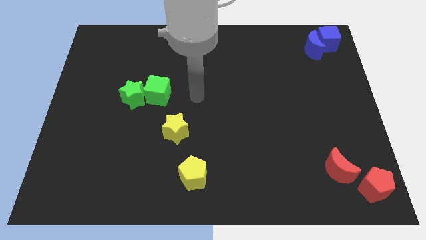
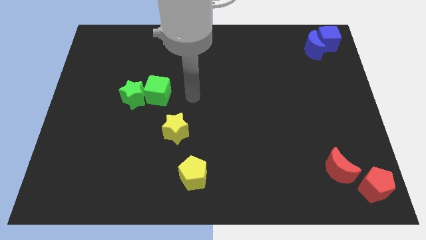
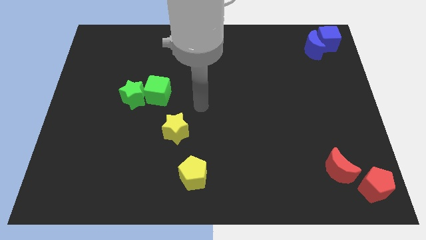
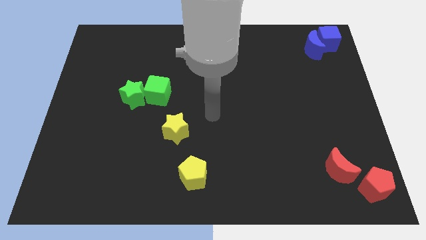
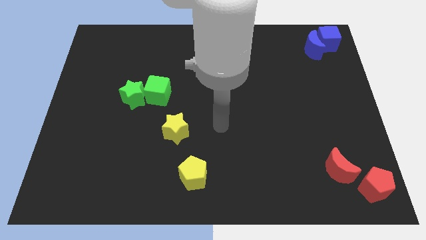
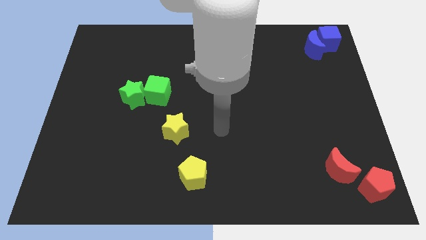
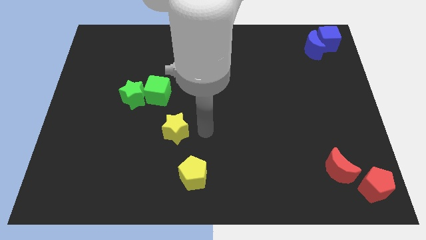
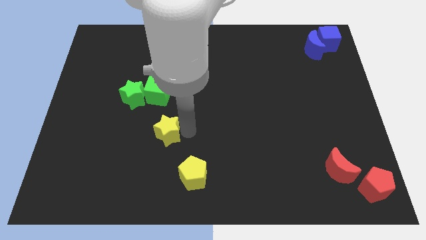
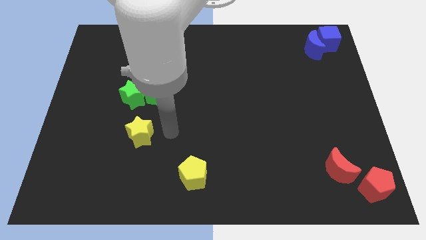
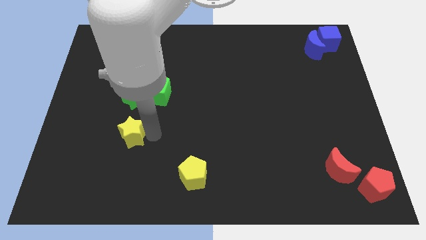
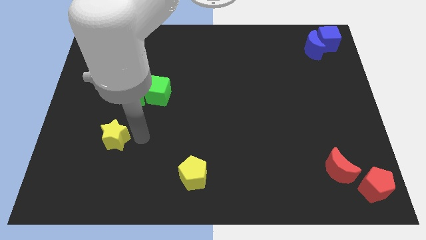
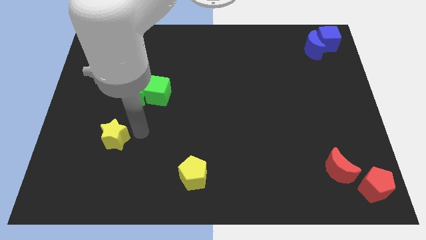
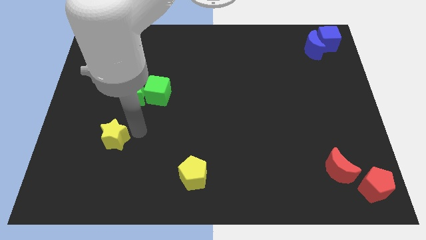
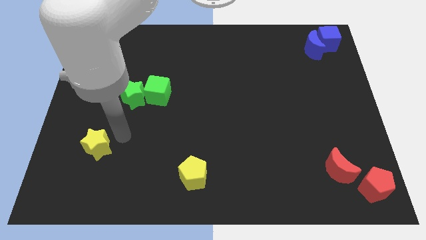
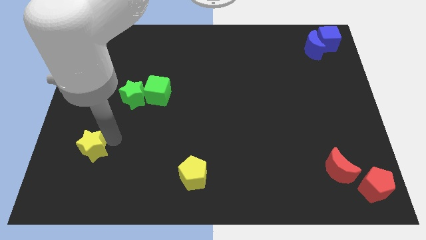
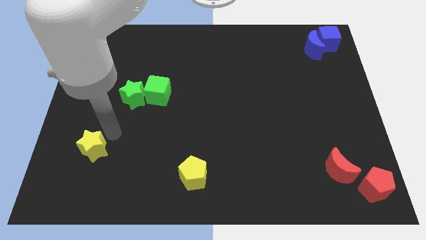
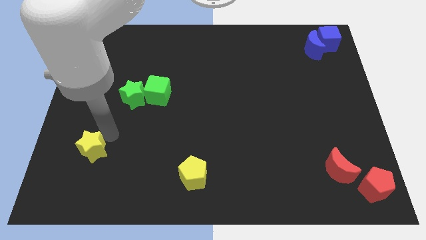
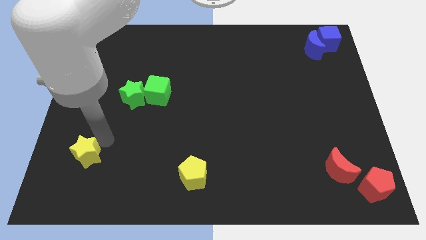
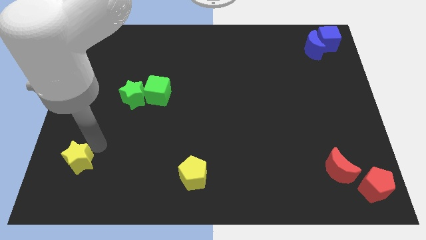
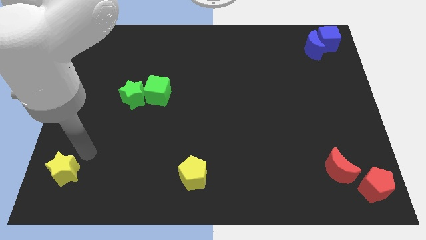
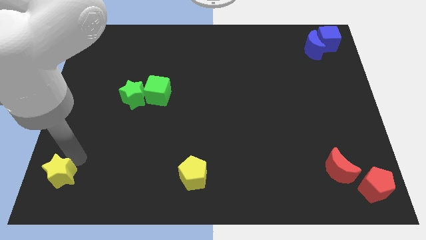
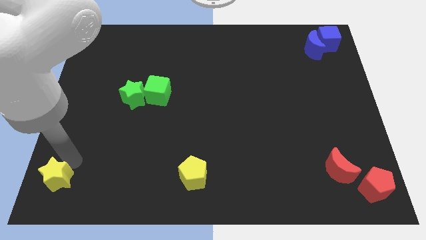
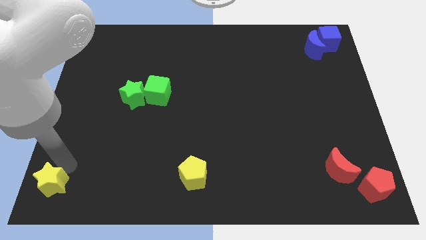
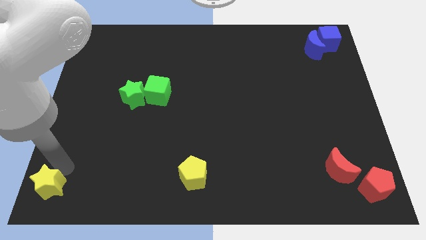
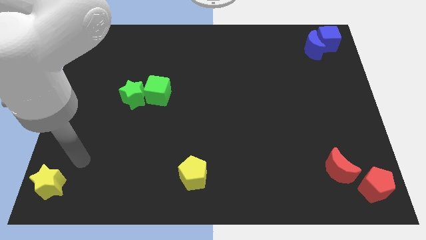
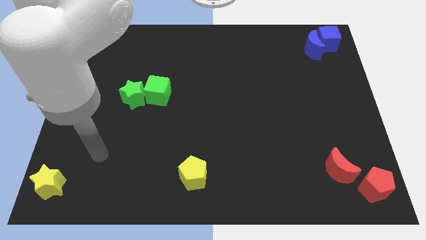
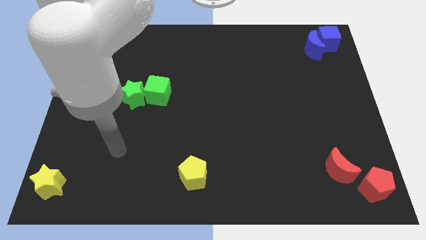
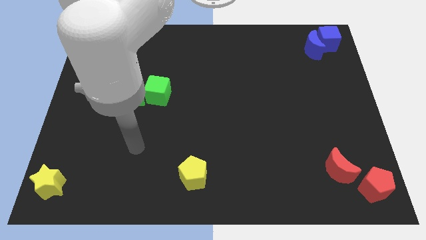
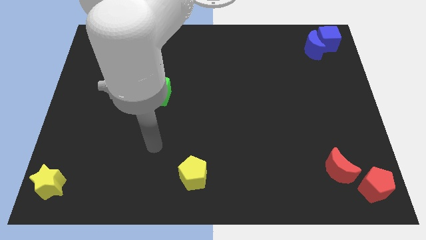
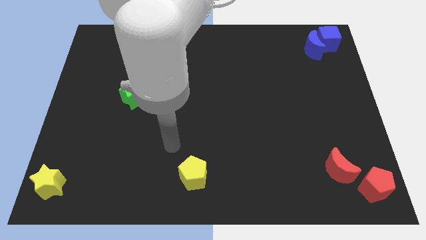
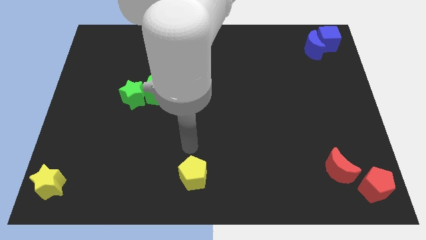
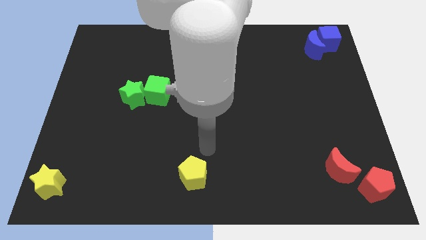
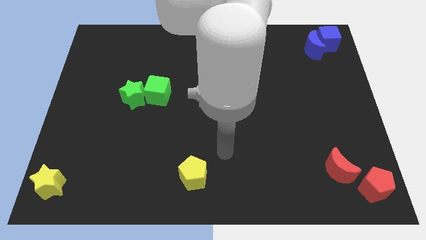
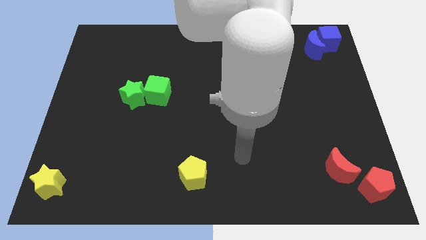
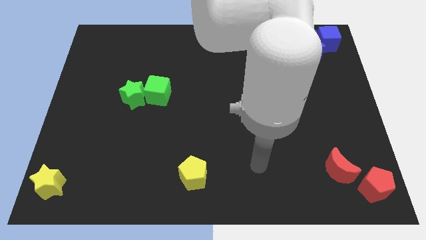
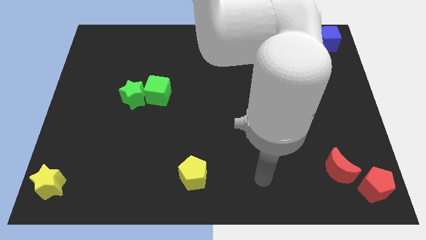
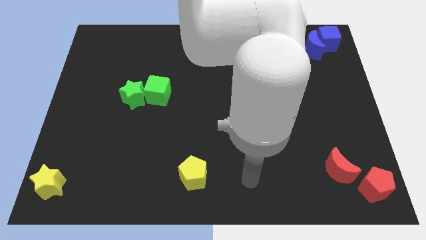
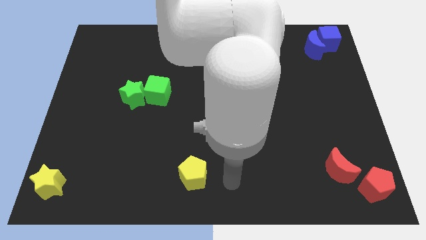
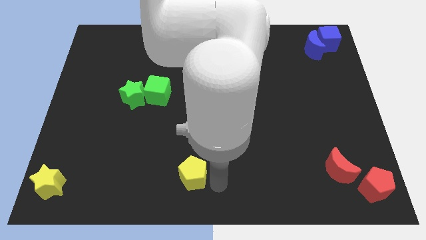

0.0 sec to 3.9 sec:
drag the yellow star to the bottom left

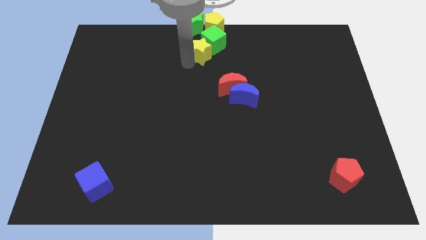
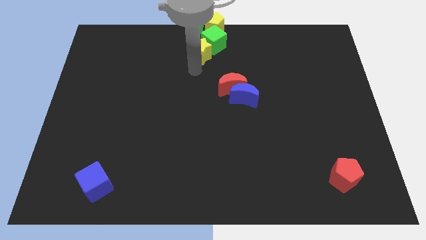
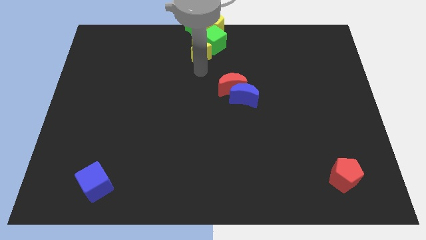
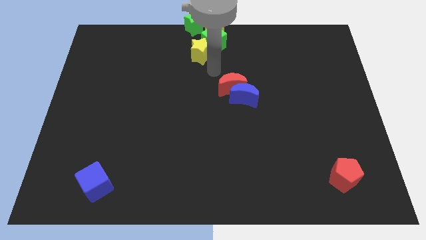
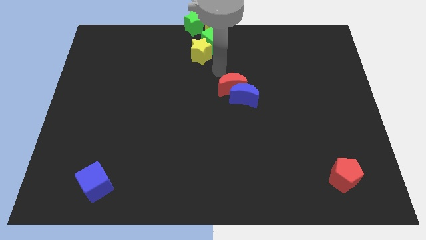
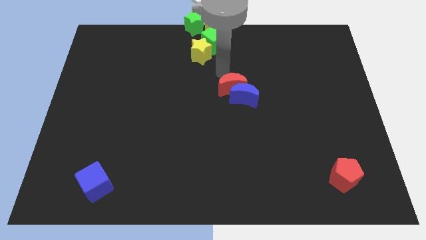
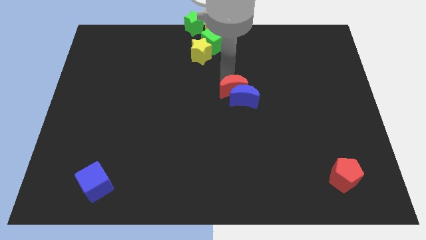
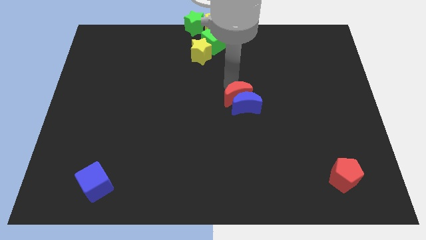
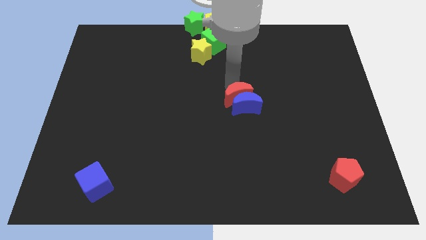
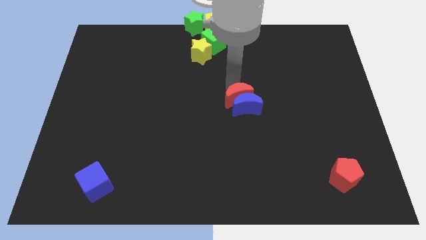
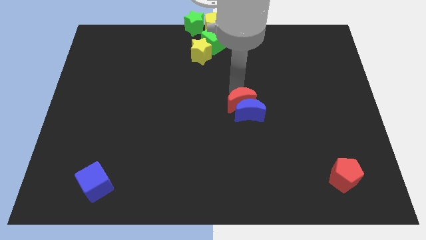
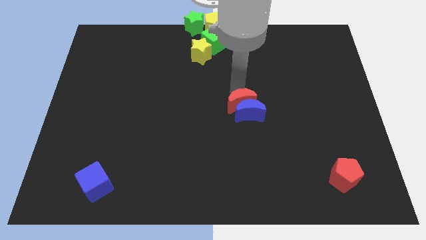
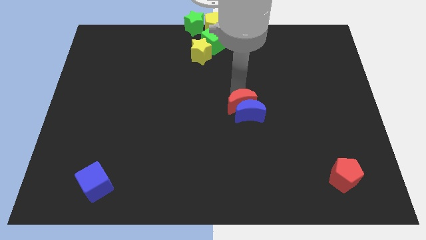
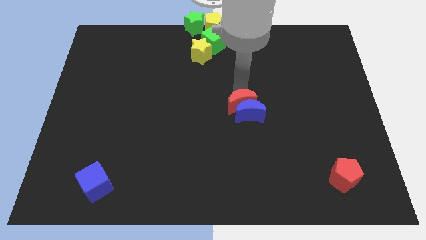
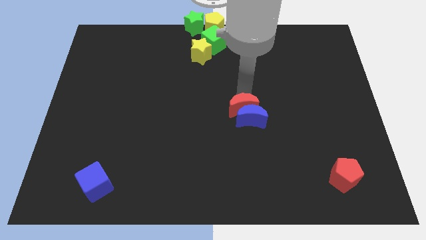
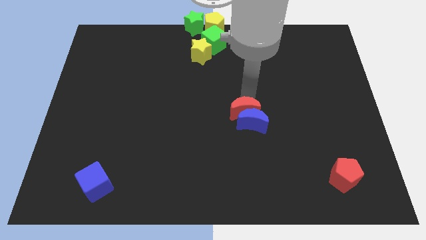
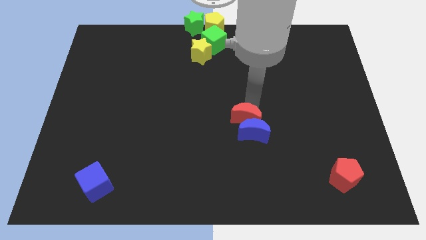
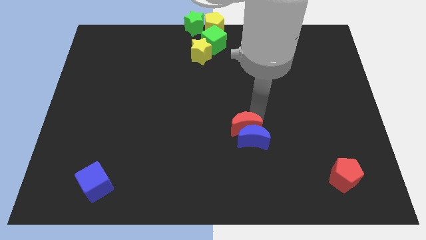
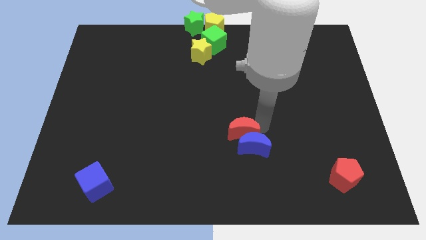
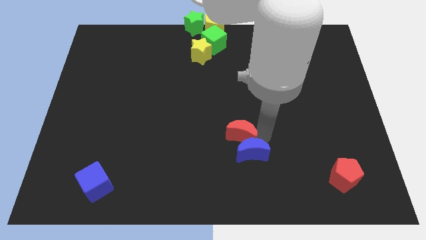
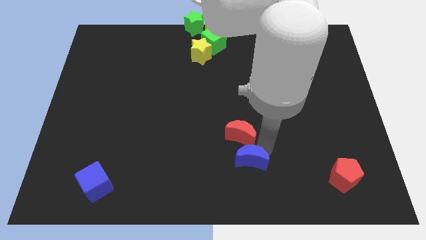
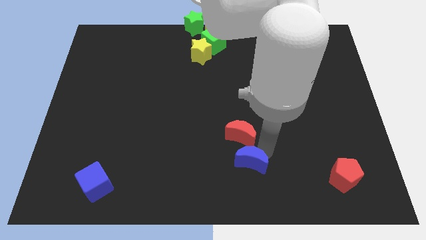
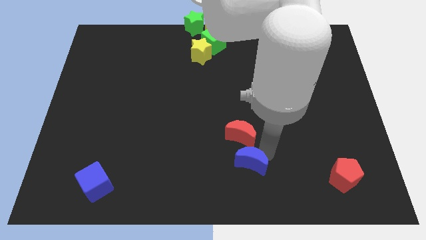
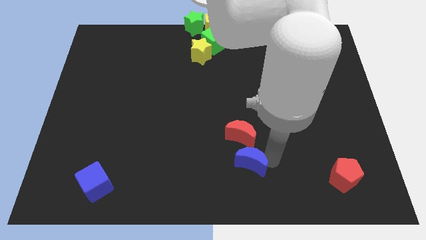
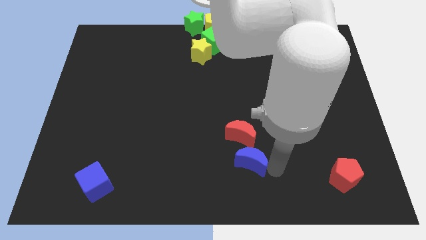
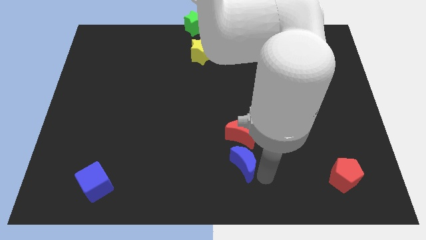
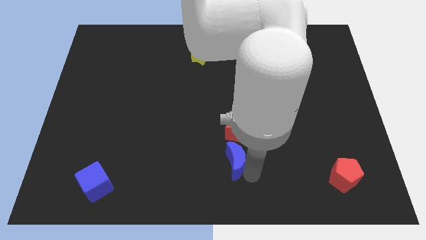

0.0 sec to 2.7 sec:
push the red moon and the blue crescent towards the bottom

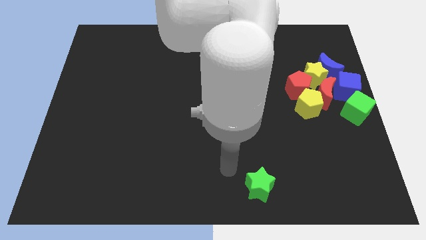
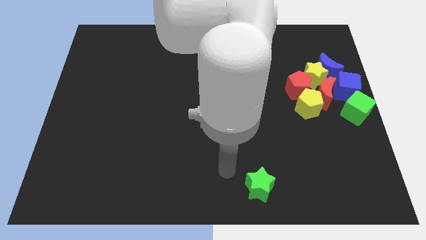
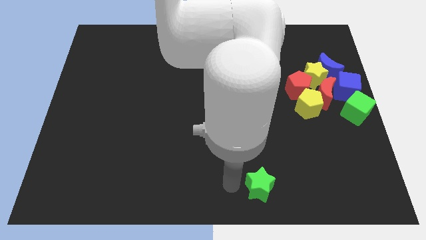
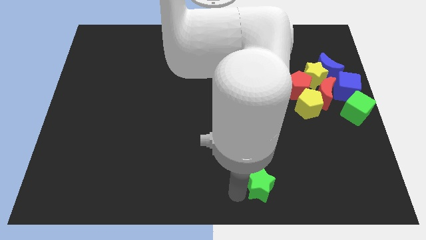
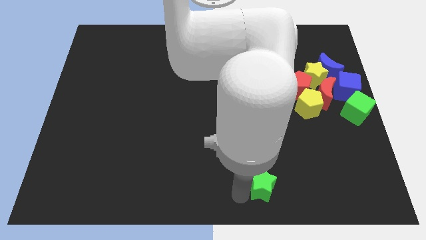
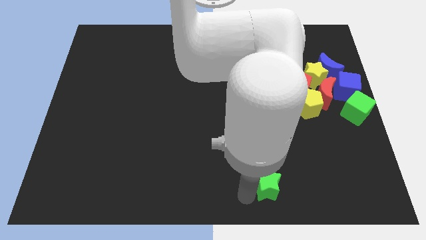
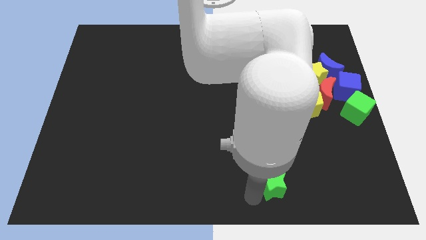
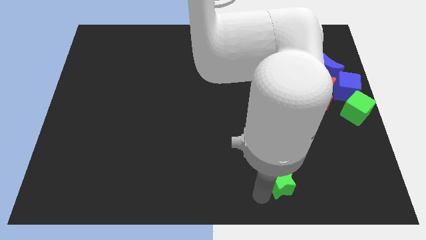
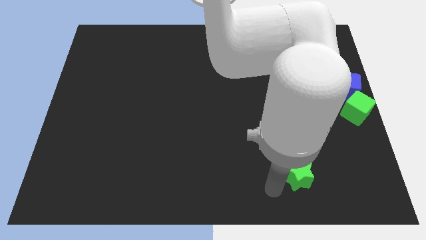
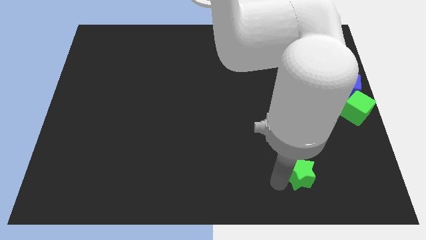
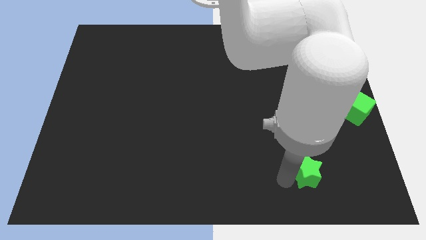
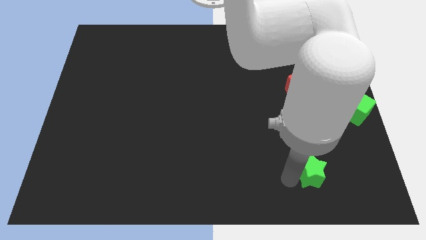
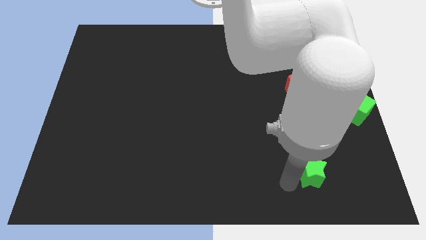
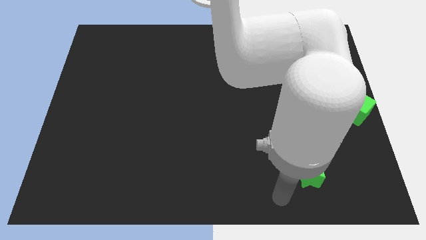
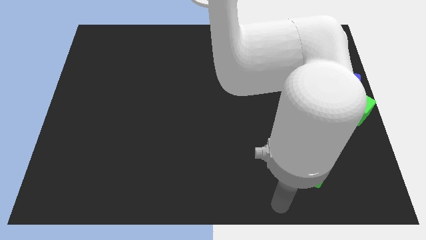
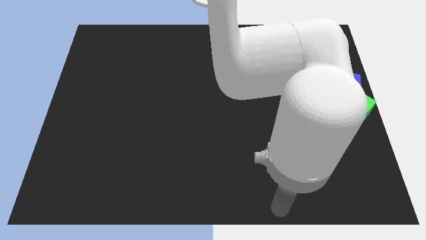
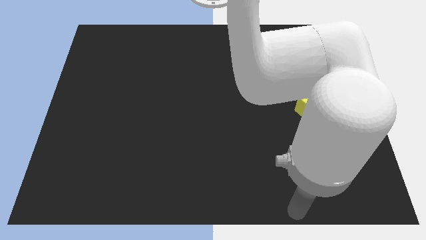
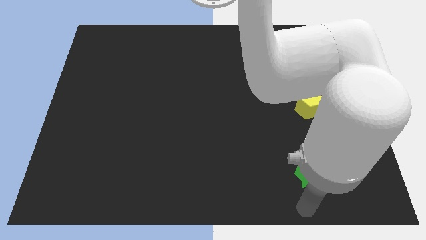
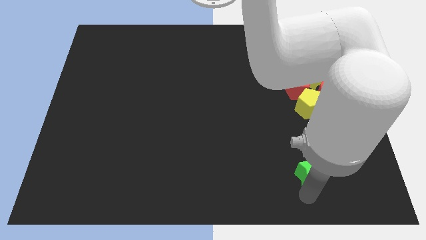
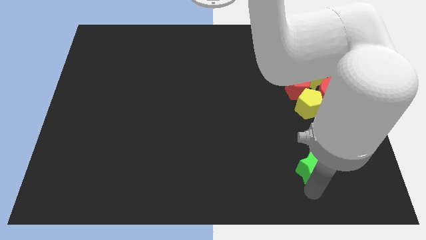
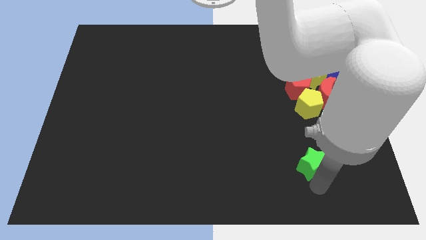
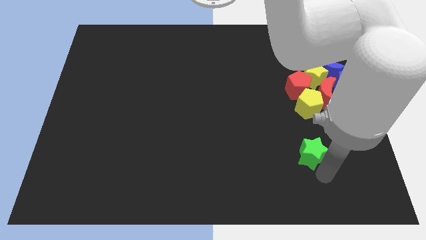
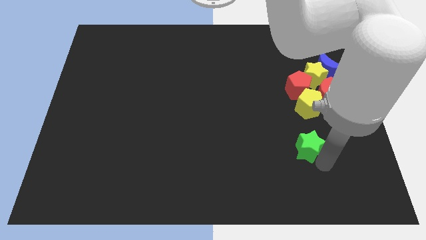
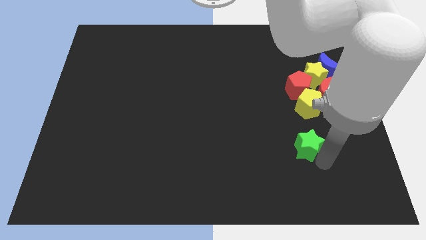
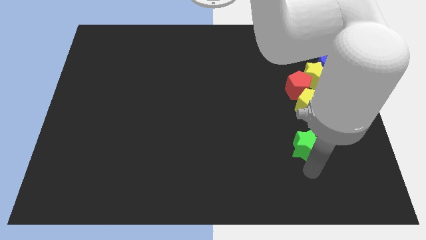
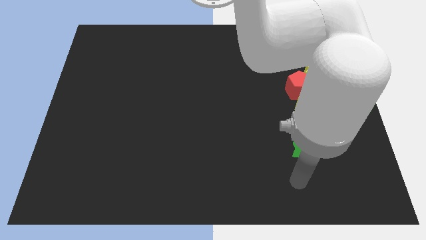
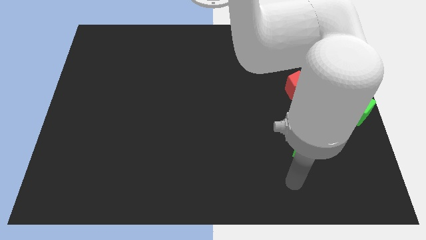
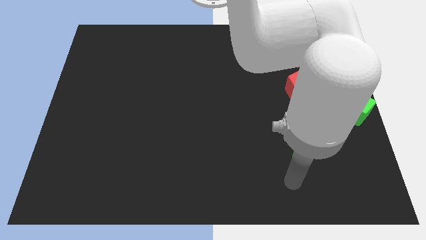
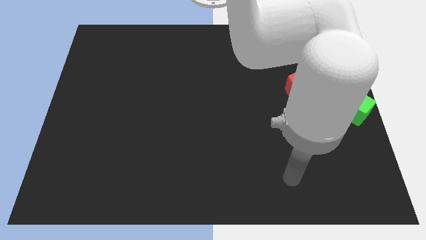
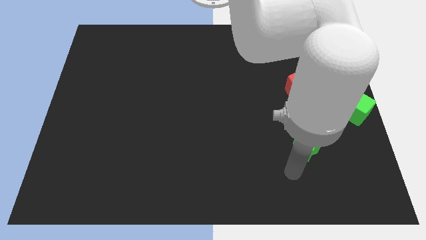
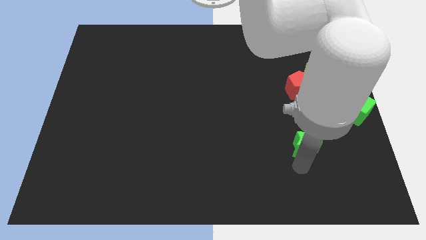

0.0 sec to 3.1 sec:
place the green star under the yellow pentagon
